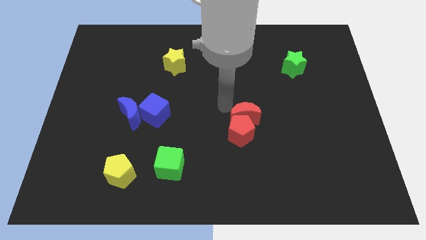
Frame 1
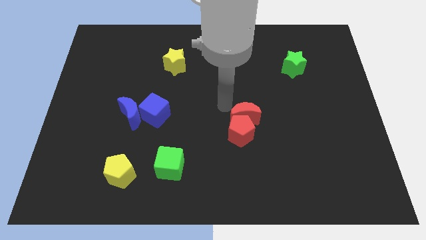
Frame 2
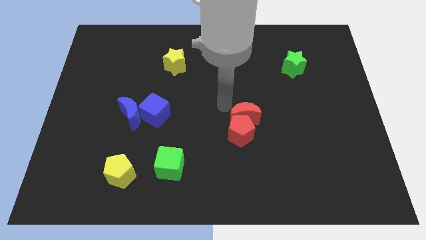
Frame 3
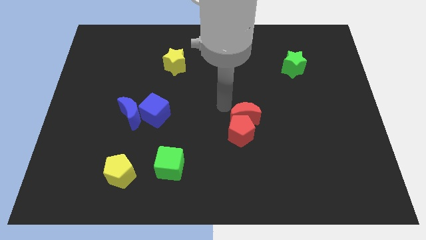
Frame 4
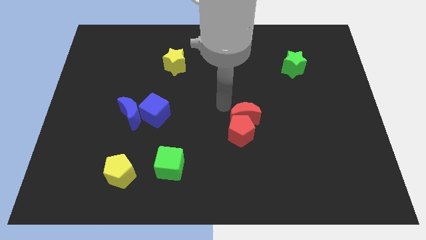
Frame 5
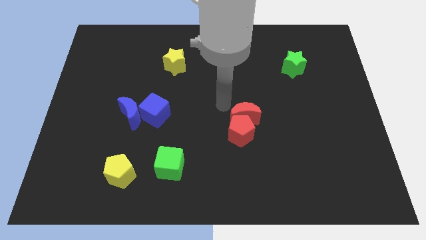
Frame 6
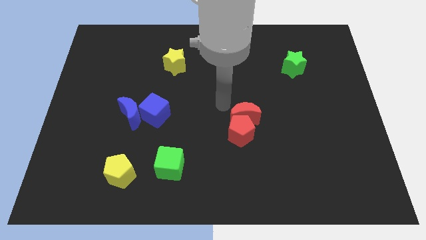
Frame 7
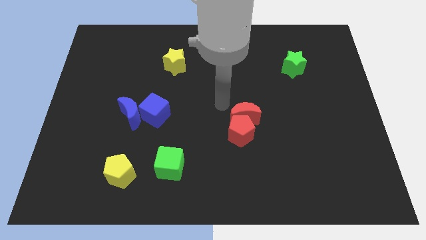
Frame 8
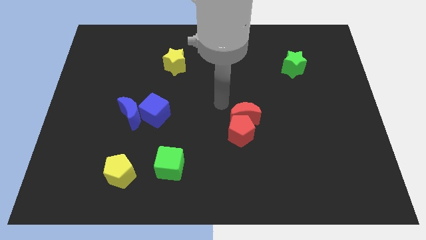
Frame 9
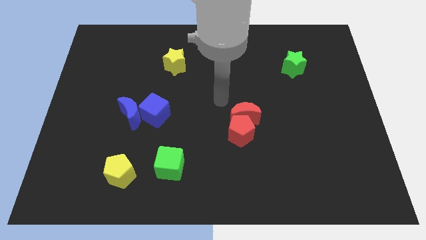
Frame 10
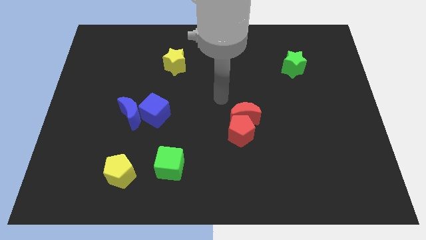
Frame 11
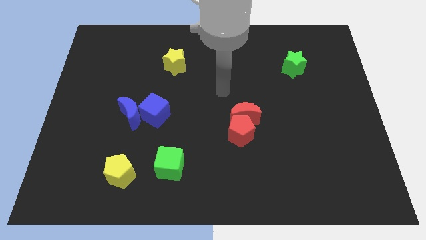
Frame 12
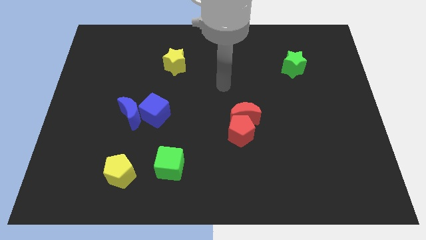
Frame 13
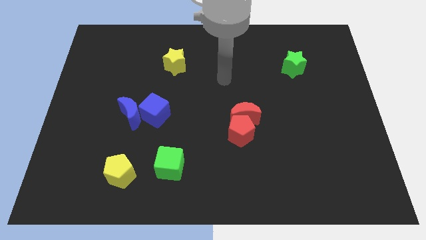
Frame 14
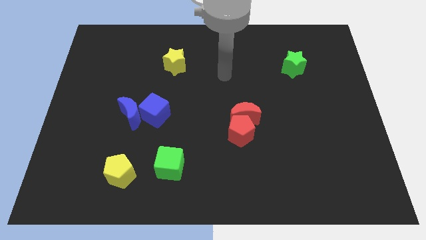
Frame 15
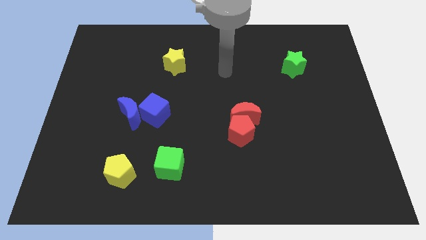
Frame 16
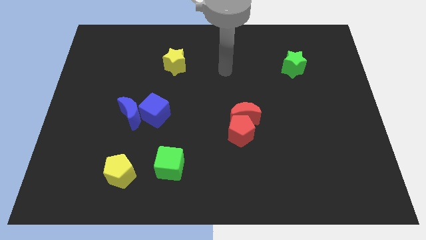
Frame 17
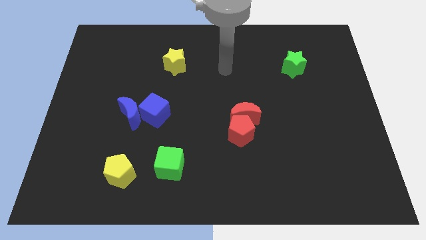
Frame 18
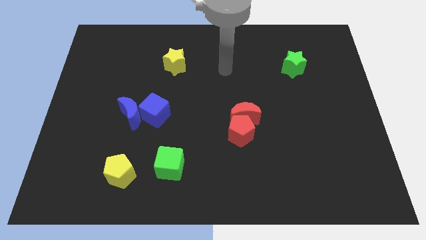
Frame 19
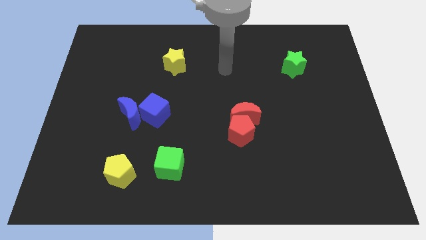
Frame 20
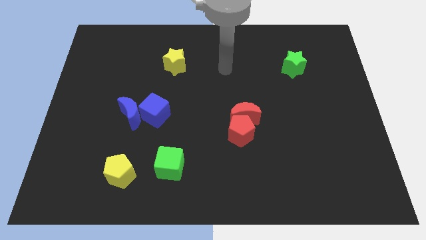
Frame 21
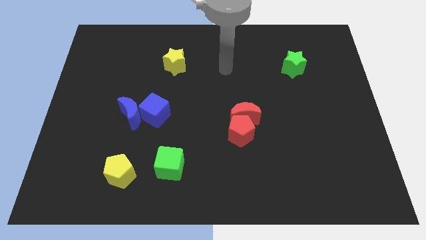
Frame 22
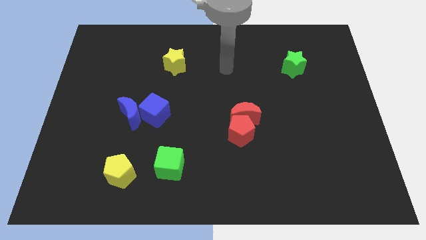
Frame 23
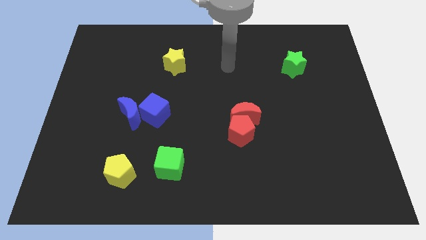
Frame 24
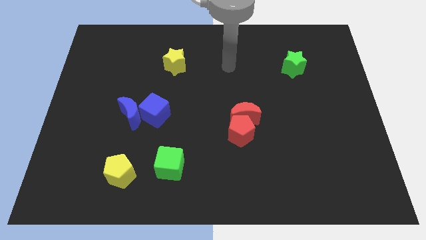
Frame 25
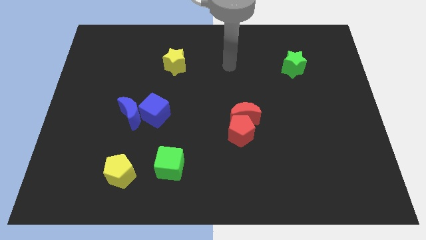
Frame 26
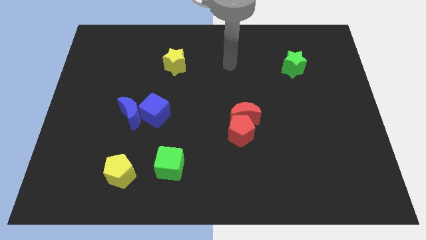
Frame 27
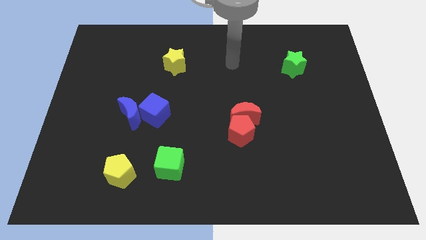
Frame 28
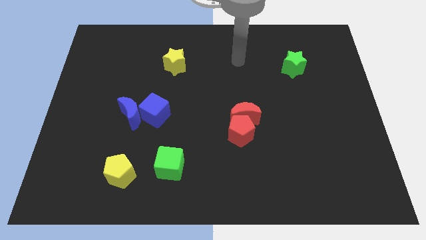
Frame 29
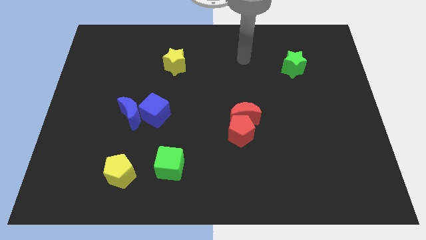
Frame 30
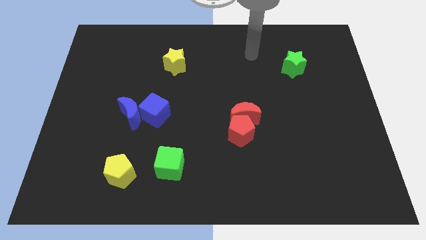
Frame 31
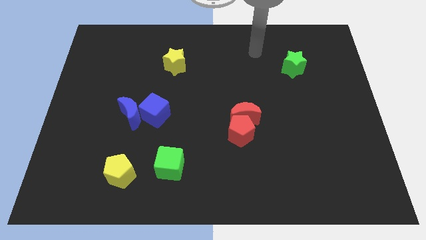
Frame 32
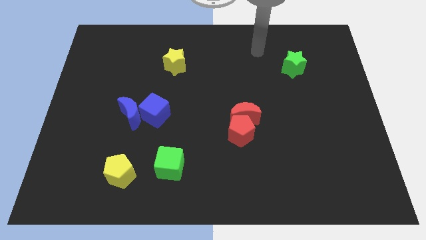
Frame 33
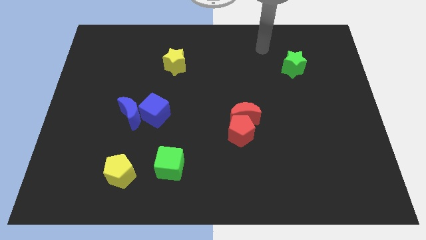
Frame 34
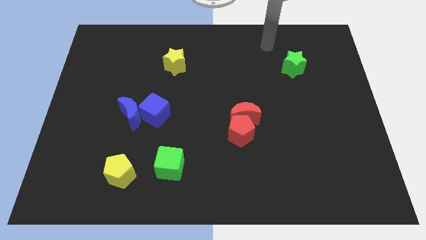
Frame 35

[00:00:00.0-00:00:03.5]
move your hand away from the red blocks

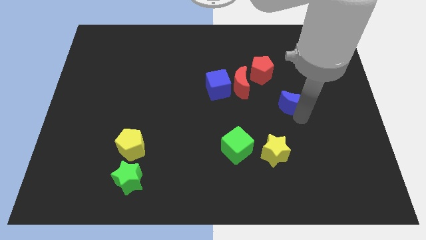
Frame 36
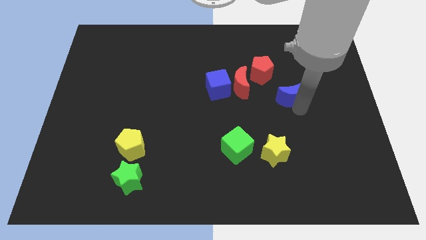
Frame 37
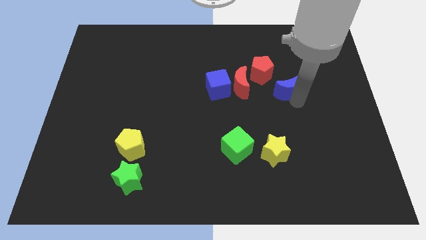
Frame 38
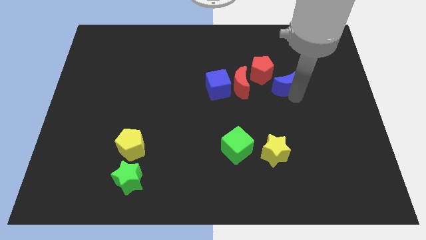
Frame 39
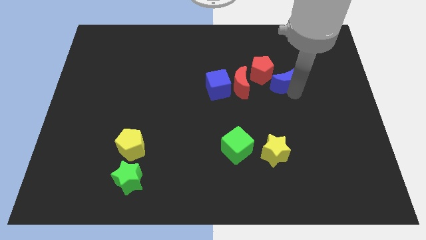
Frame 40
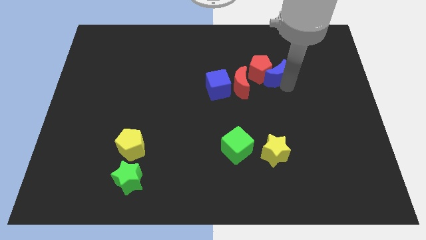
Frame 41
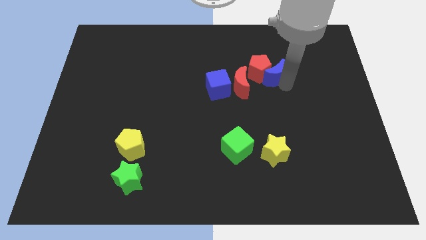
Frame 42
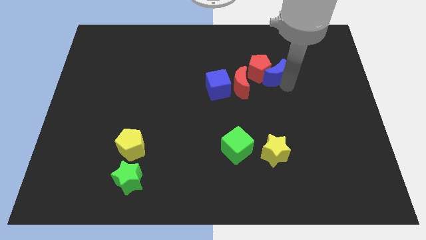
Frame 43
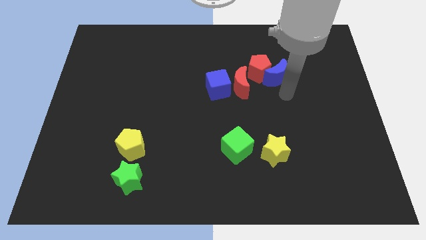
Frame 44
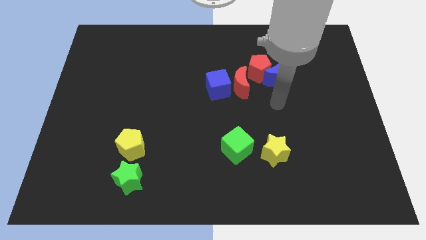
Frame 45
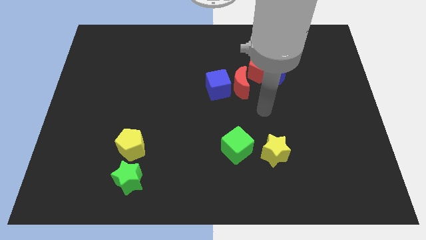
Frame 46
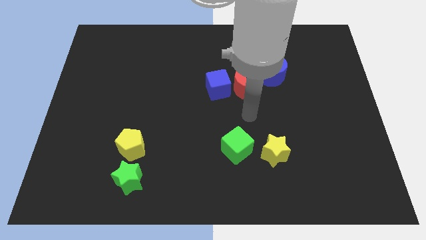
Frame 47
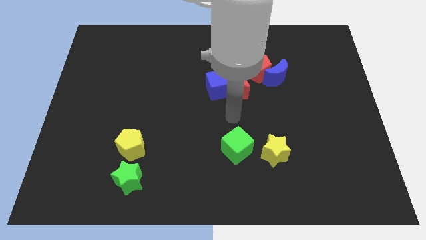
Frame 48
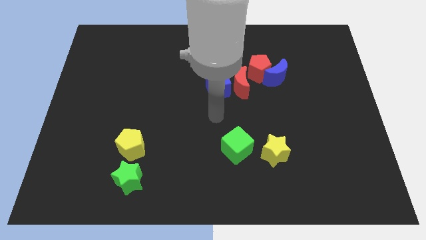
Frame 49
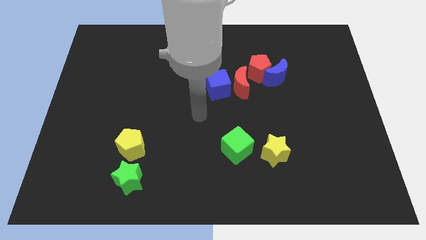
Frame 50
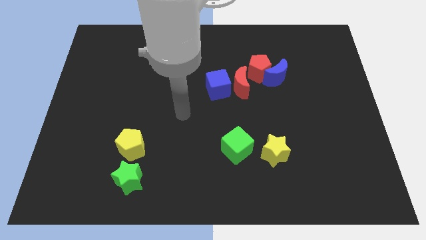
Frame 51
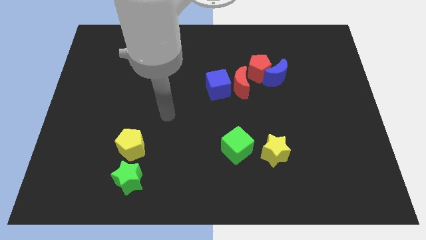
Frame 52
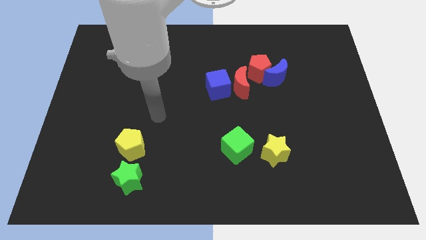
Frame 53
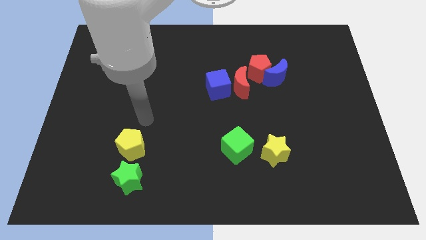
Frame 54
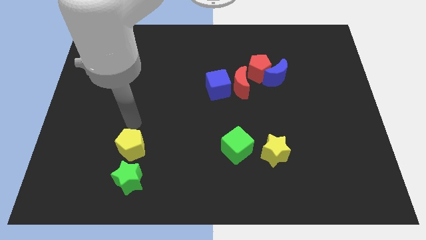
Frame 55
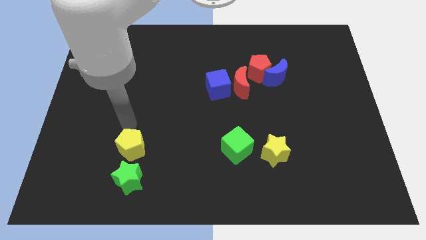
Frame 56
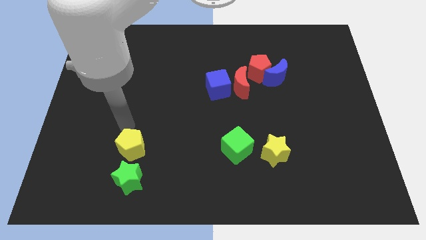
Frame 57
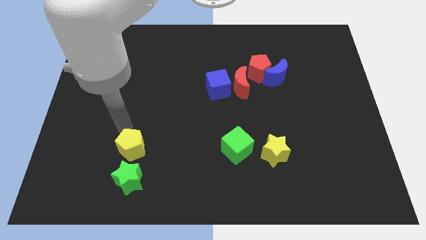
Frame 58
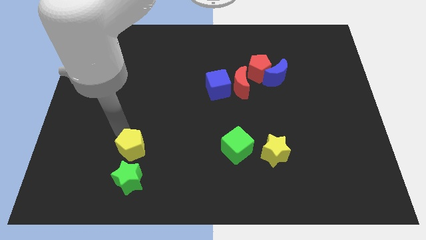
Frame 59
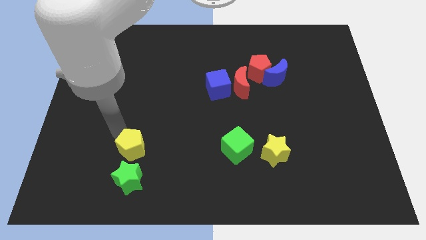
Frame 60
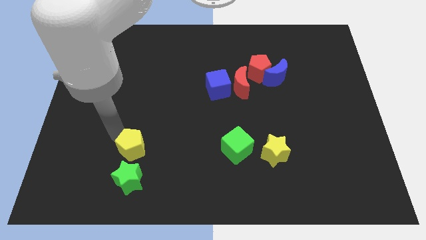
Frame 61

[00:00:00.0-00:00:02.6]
push blue crescent below red pentagon

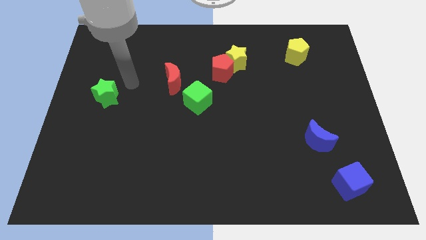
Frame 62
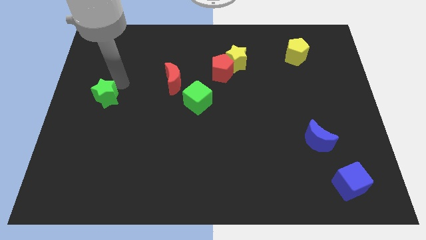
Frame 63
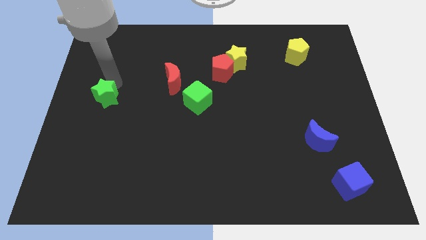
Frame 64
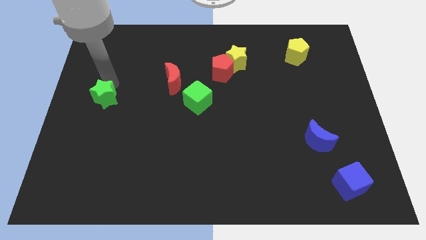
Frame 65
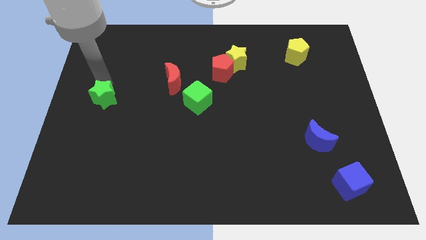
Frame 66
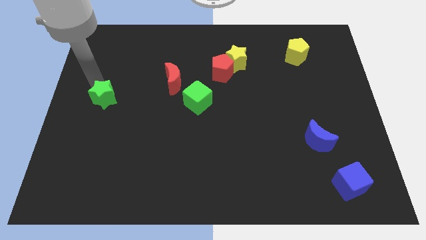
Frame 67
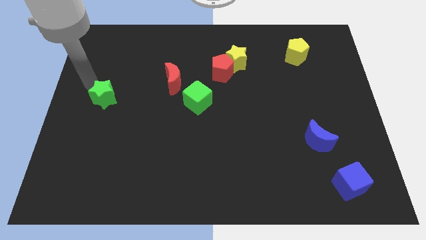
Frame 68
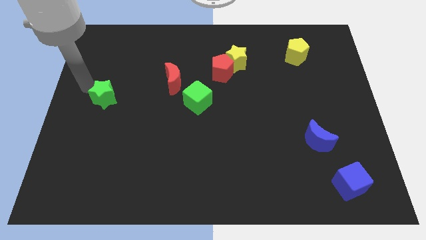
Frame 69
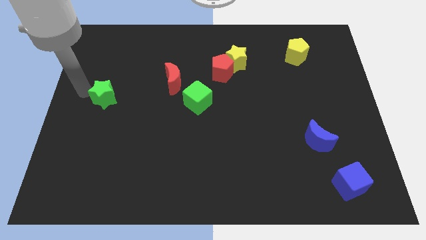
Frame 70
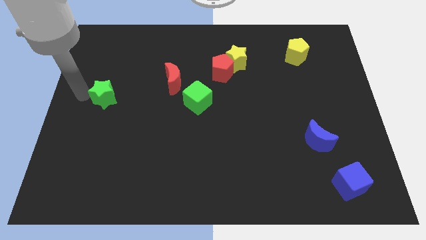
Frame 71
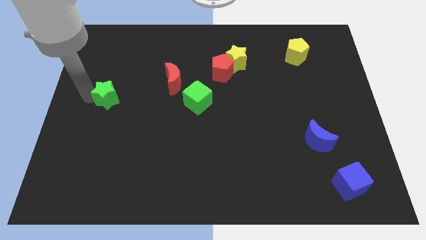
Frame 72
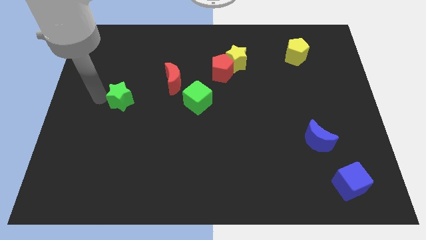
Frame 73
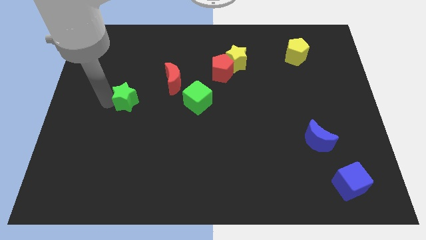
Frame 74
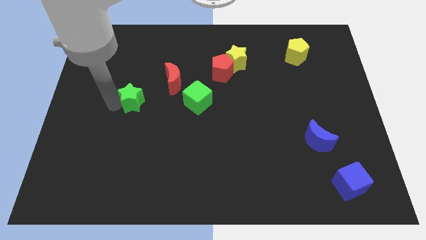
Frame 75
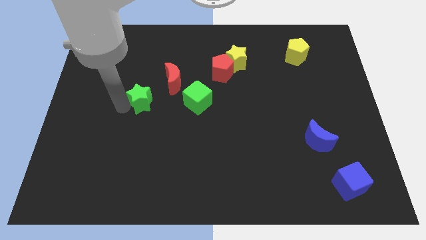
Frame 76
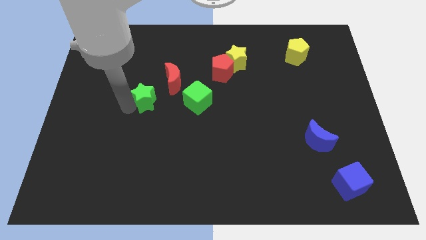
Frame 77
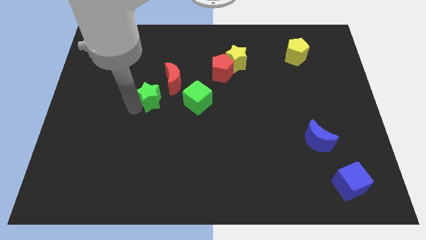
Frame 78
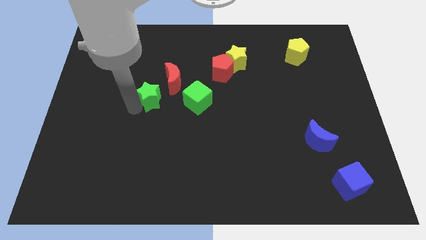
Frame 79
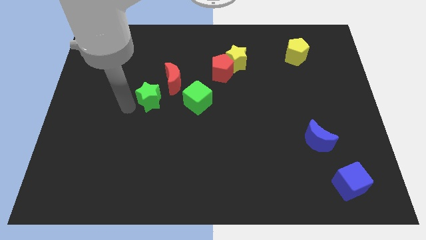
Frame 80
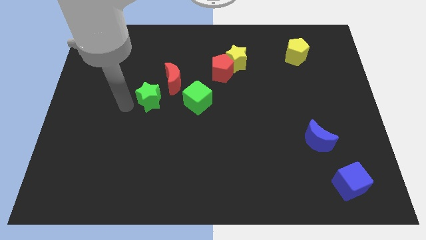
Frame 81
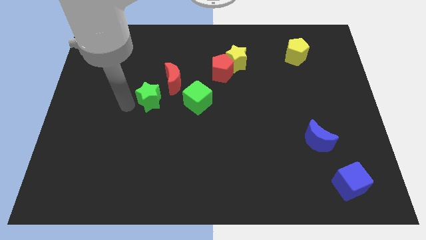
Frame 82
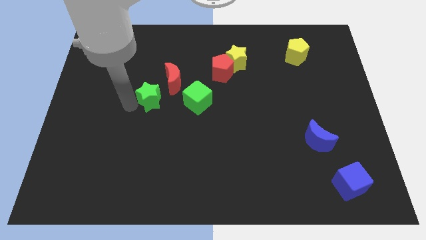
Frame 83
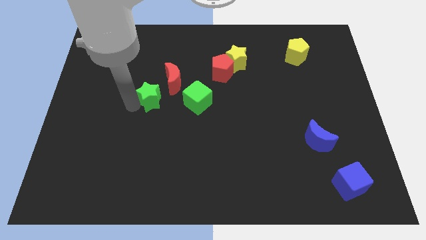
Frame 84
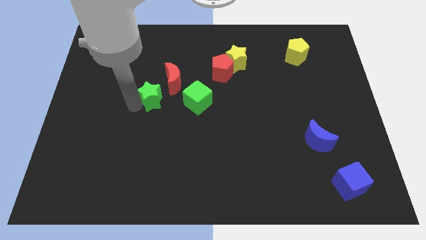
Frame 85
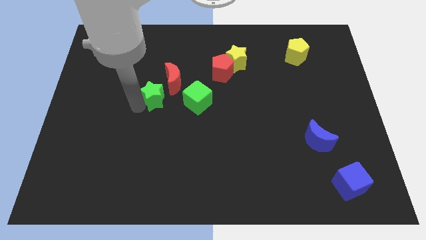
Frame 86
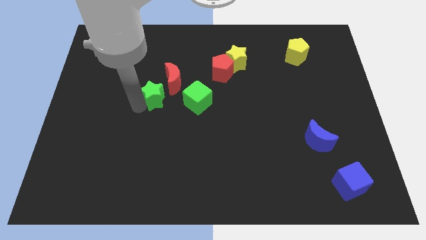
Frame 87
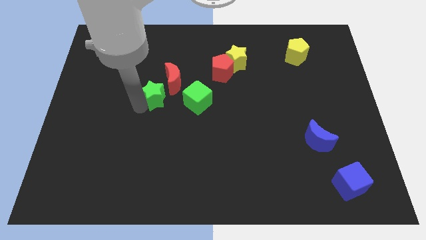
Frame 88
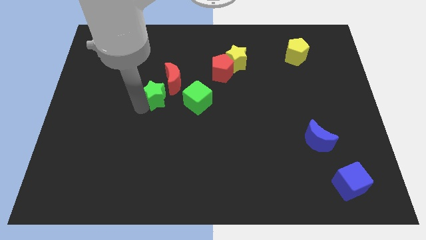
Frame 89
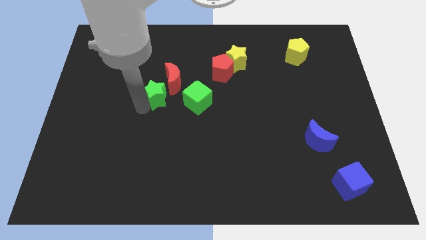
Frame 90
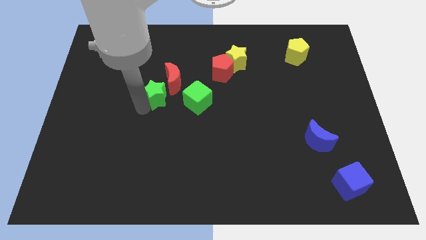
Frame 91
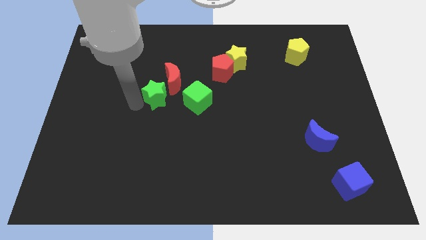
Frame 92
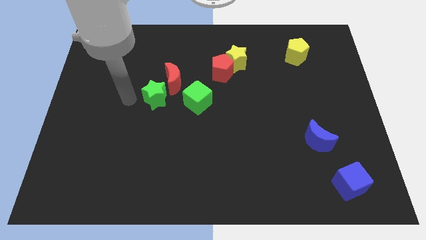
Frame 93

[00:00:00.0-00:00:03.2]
place the green star to the bottom left of red moon
